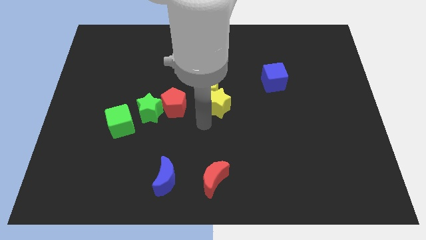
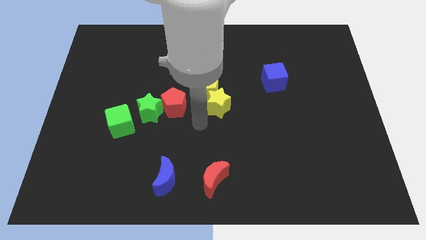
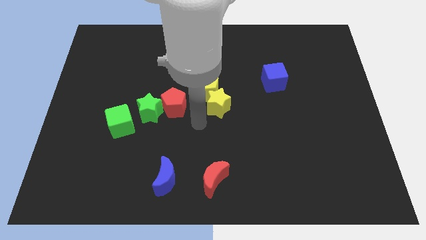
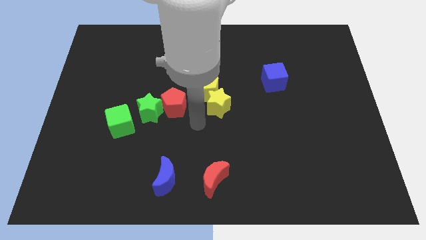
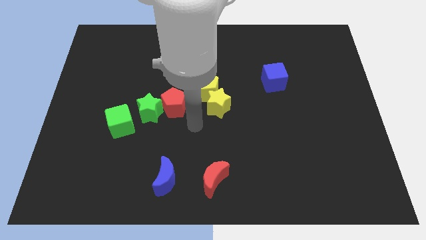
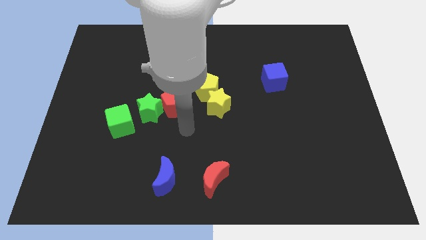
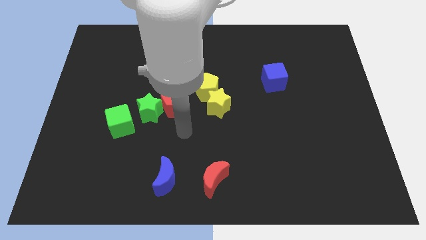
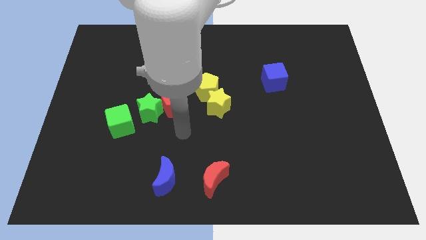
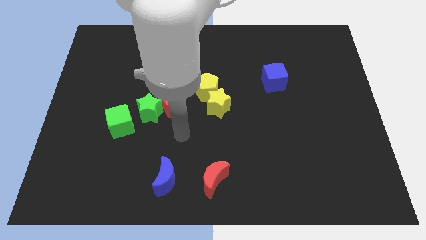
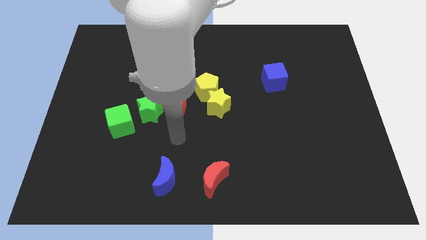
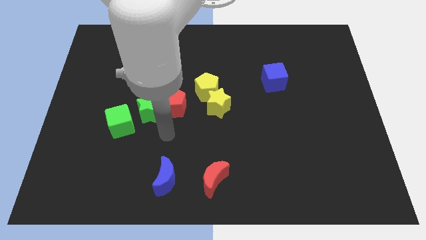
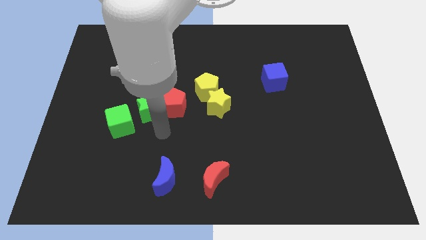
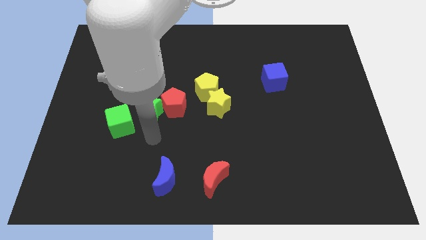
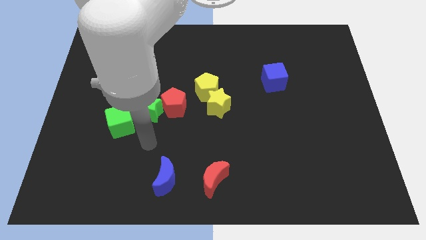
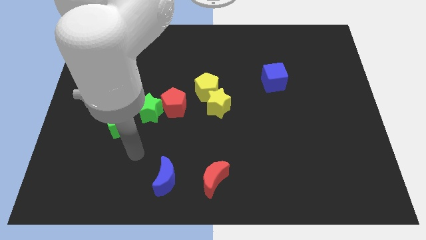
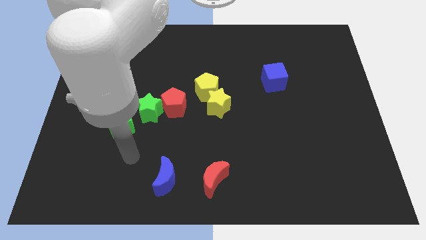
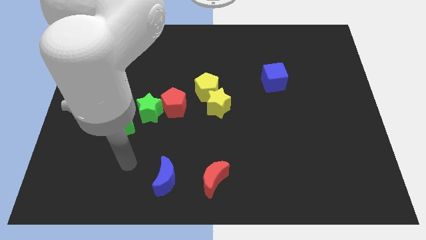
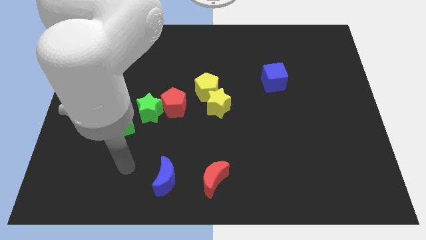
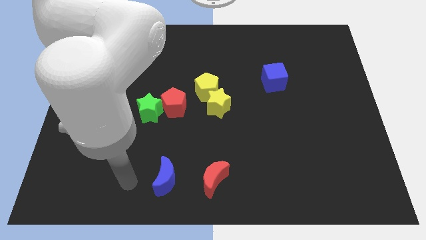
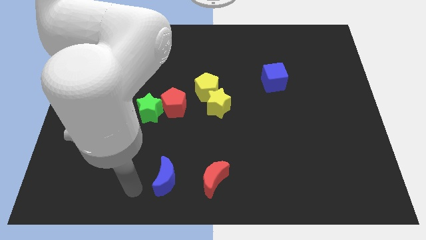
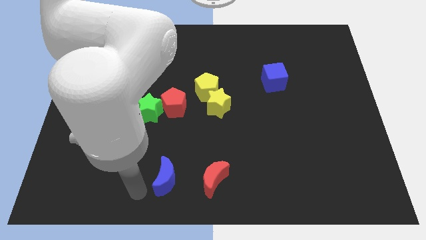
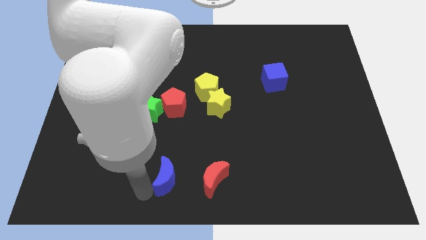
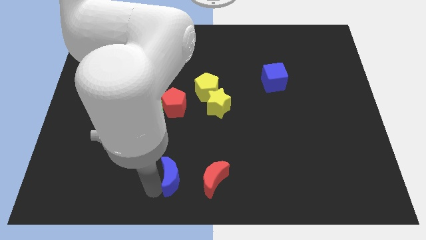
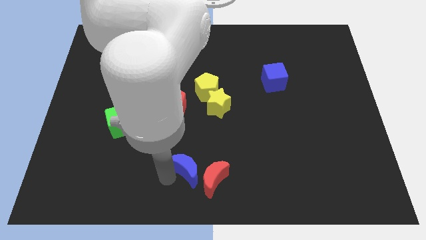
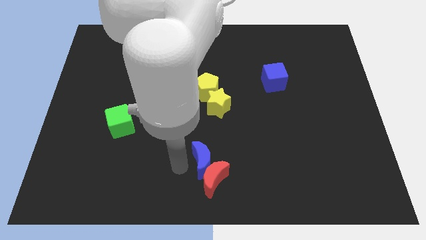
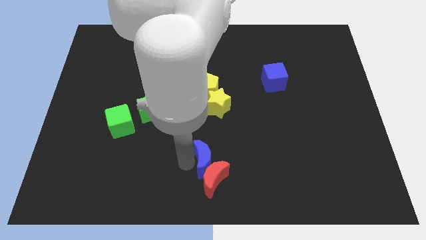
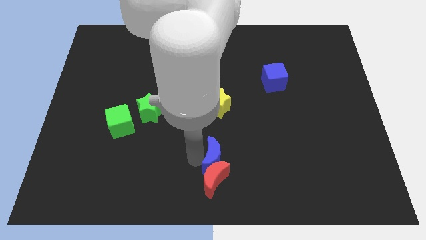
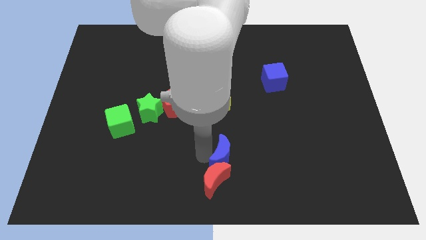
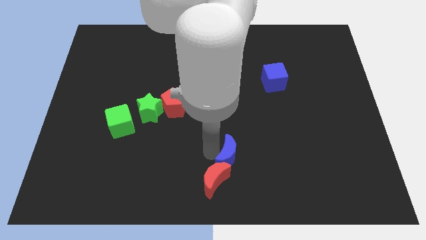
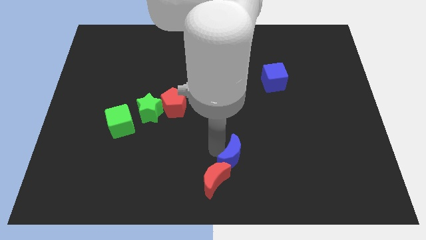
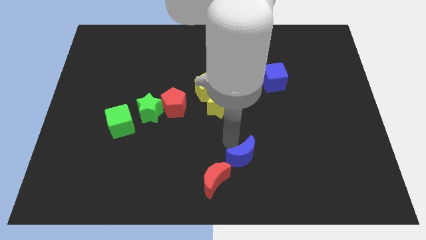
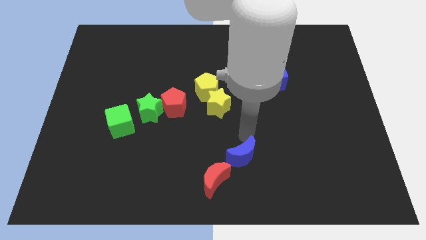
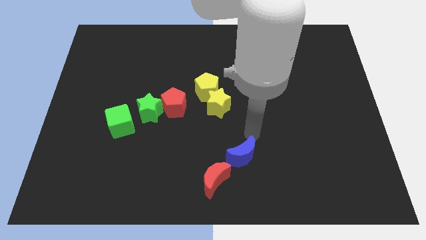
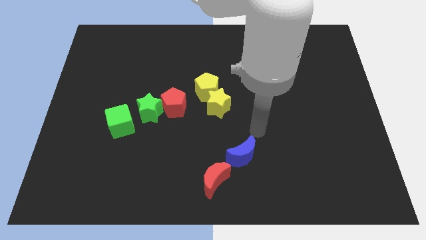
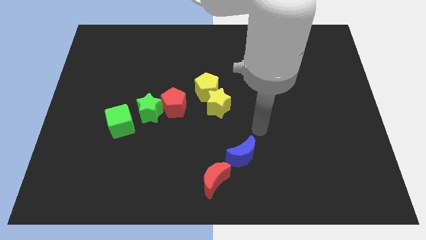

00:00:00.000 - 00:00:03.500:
drag the blue moon diagonally to the red moon

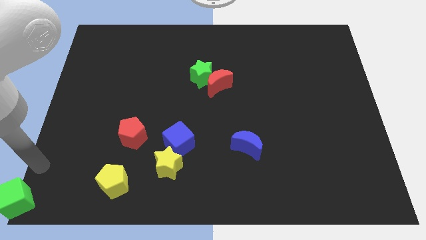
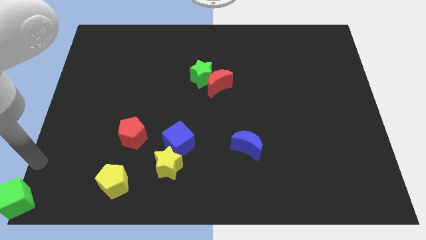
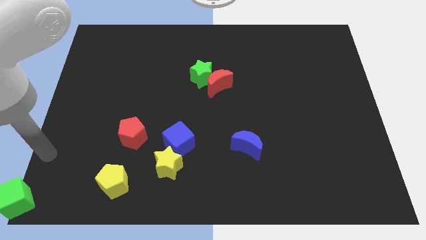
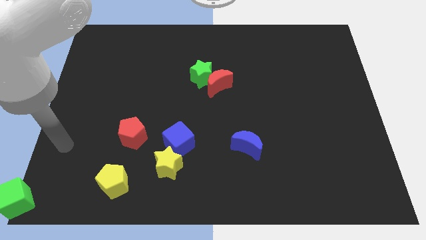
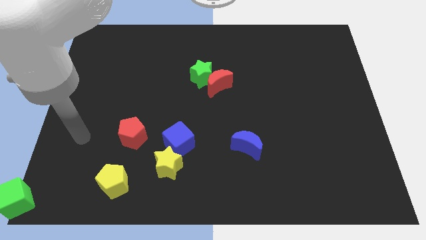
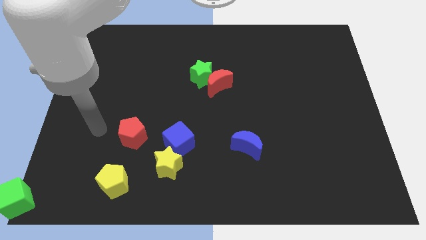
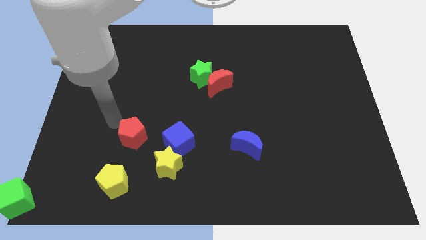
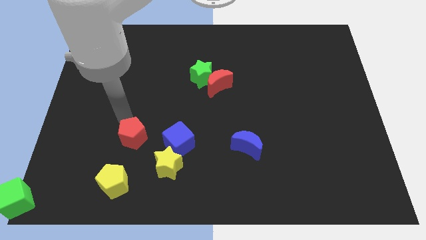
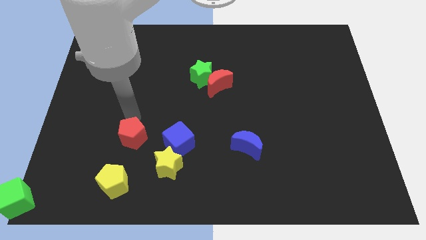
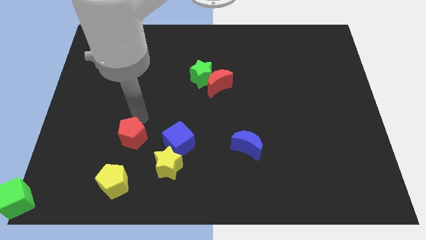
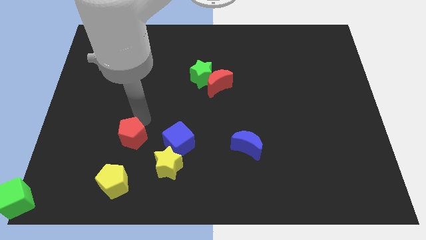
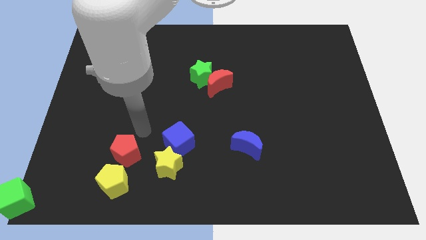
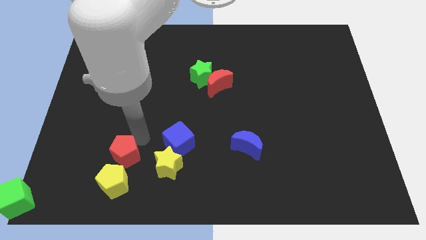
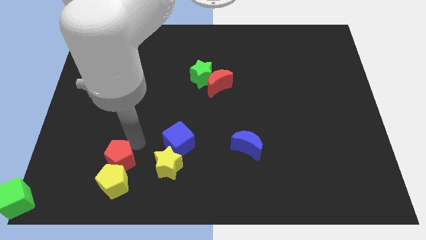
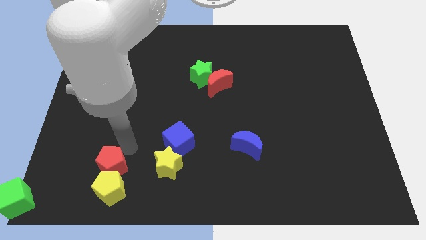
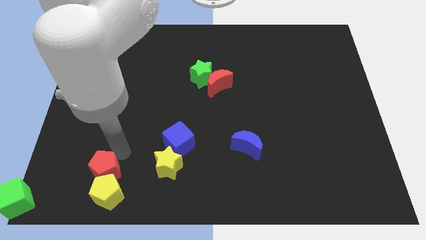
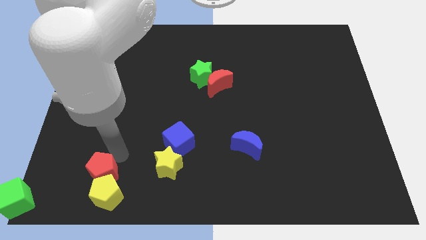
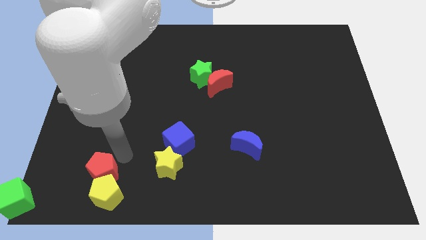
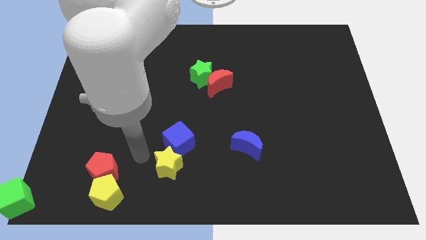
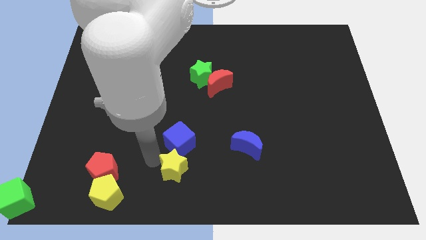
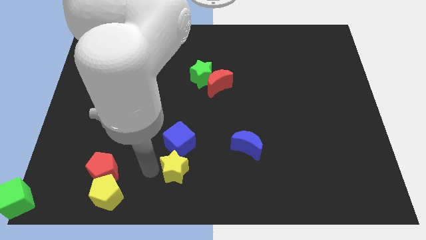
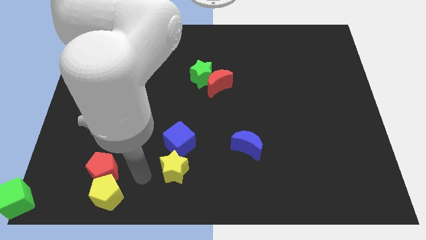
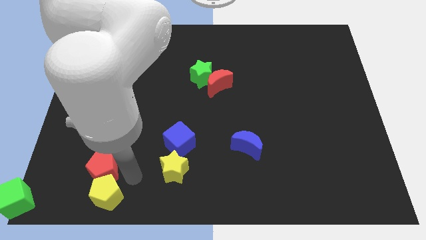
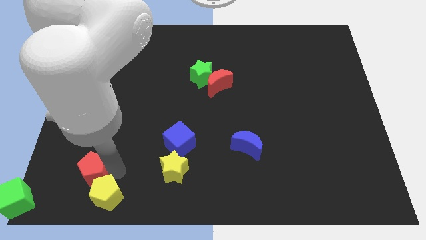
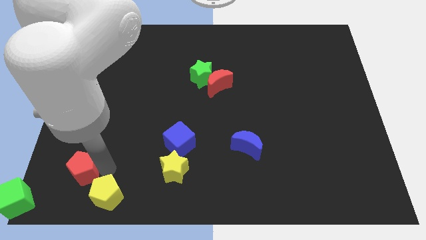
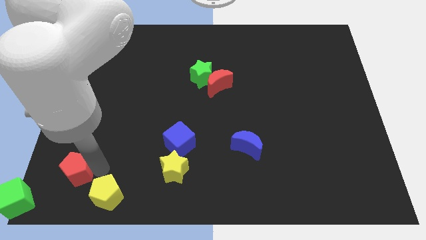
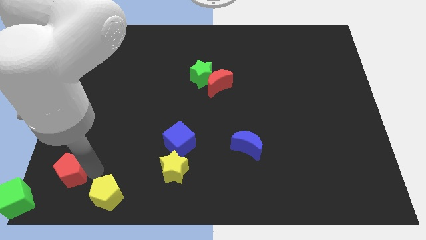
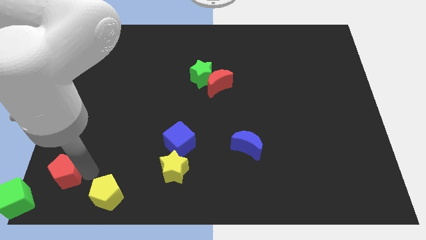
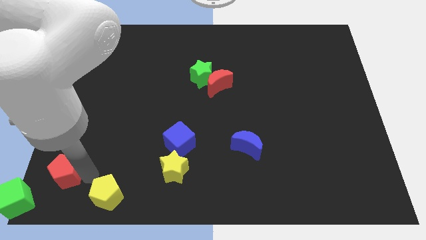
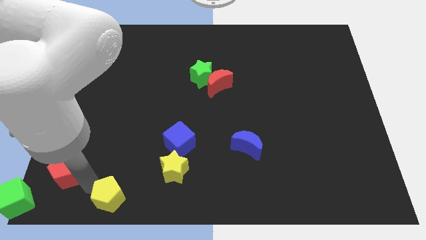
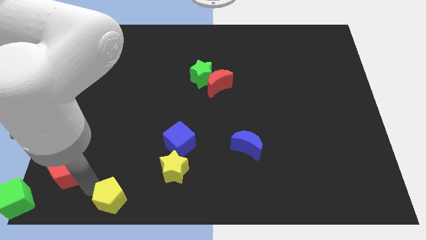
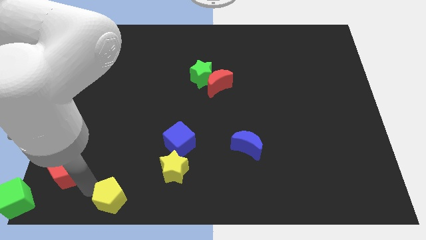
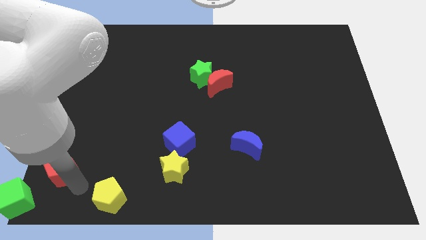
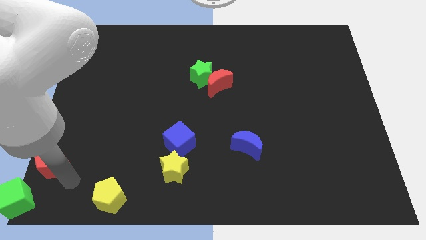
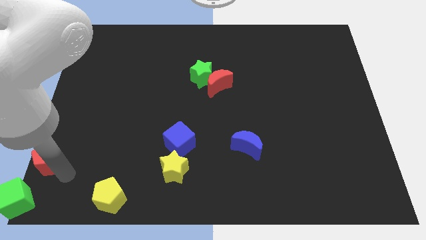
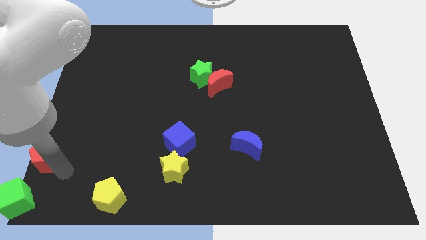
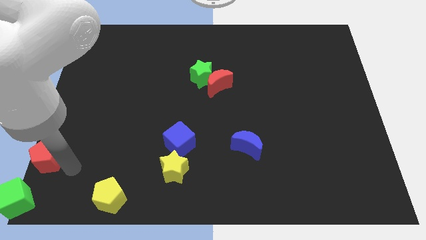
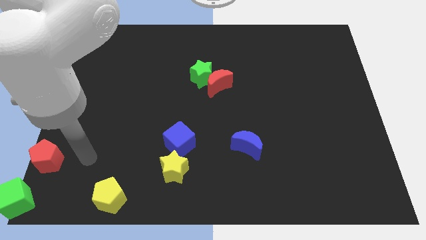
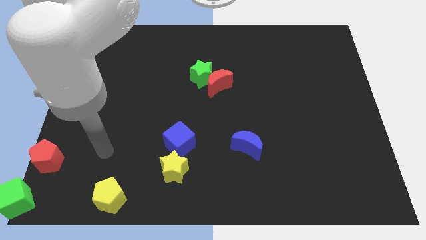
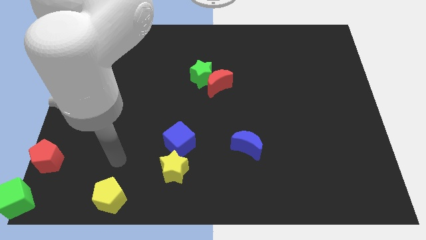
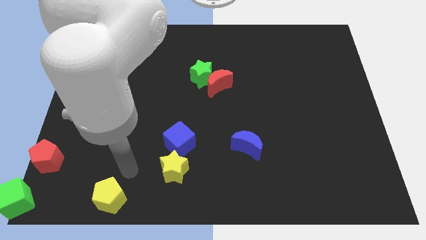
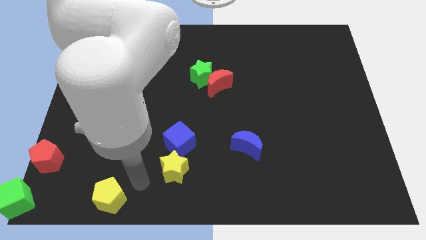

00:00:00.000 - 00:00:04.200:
place the red pentagon above the green cube

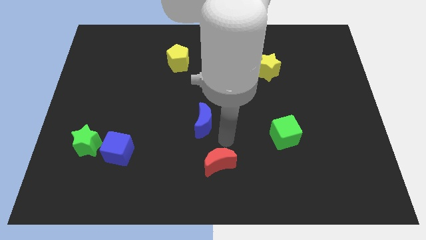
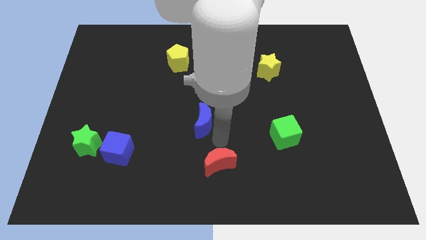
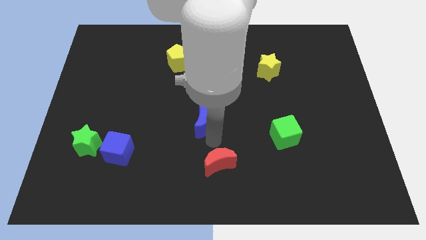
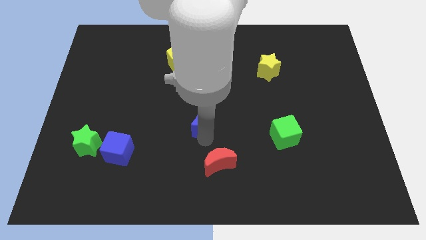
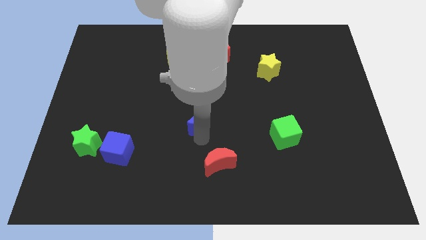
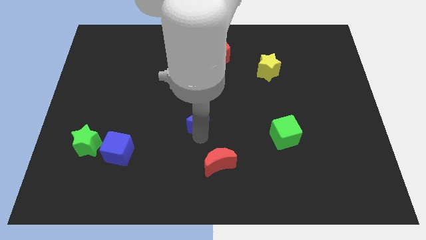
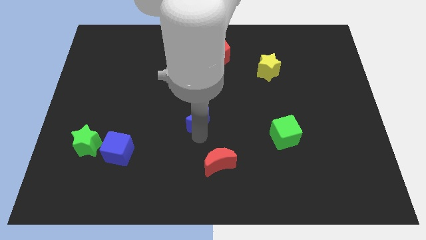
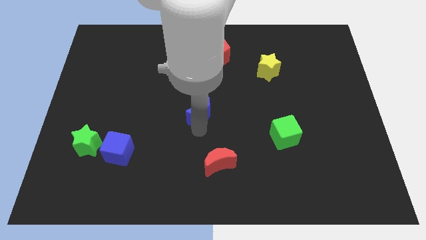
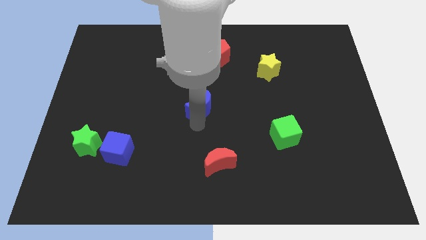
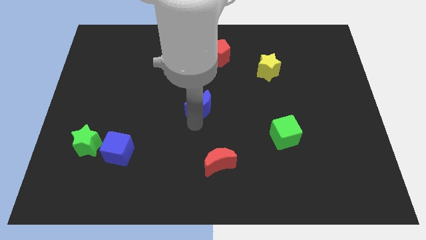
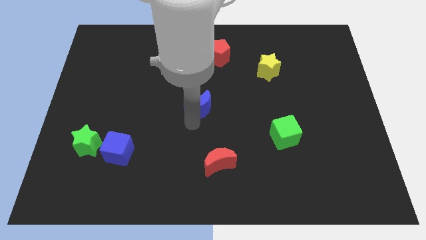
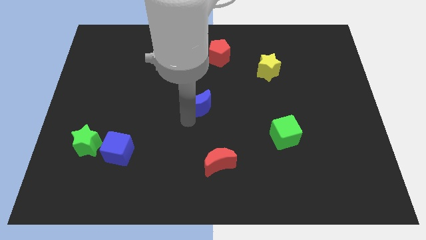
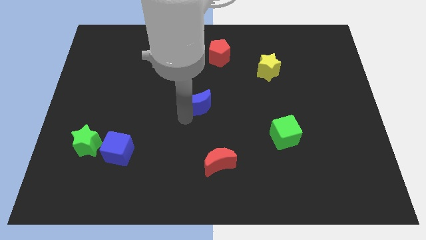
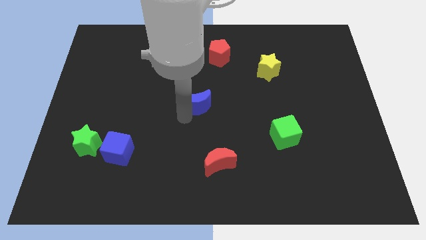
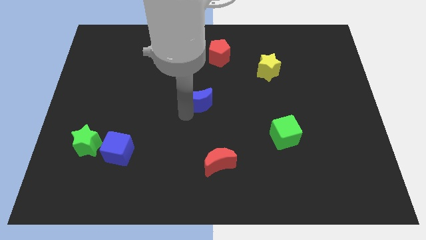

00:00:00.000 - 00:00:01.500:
slide the blue moon up slightly
